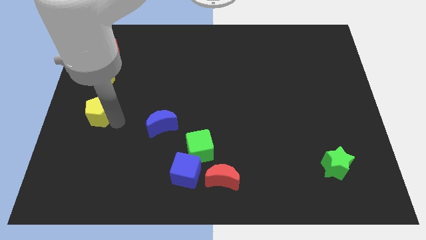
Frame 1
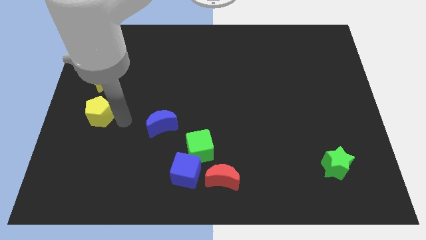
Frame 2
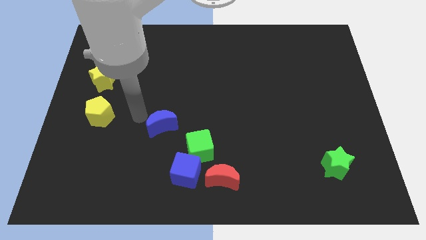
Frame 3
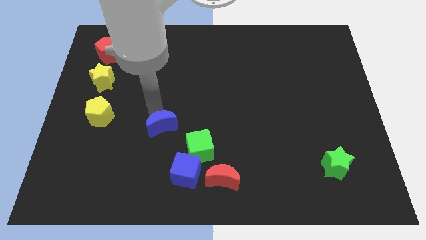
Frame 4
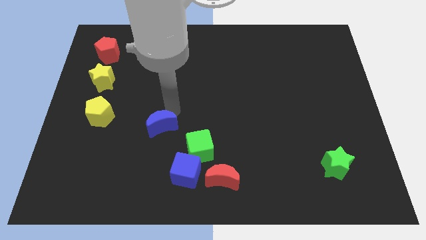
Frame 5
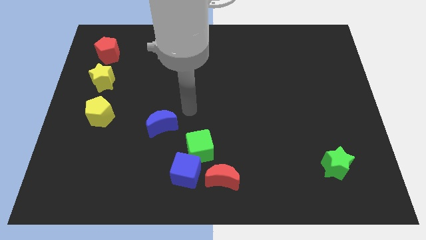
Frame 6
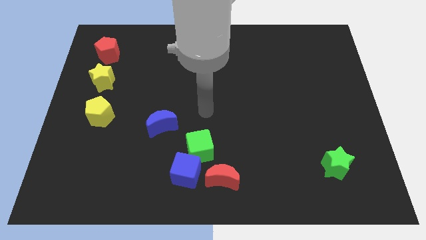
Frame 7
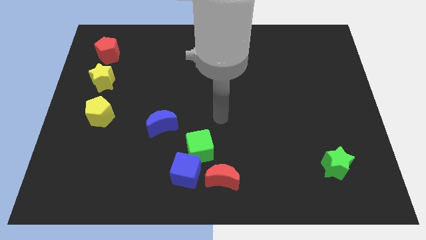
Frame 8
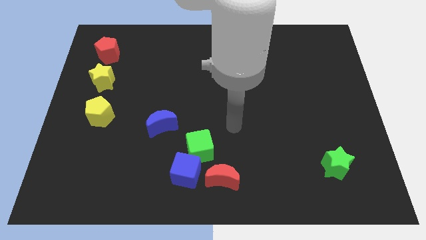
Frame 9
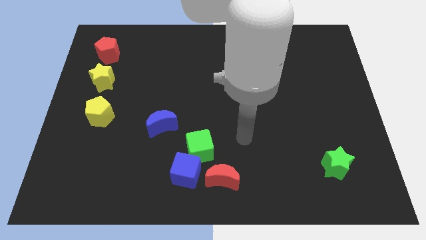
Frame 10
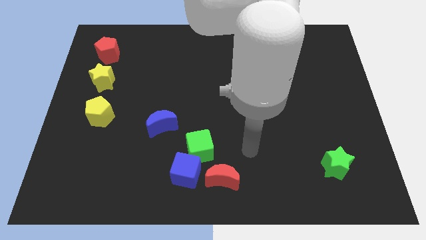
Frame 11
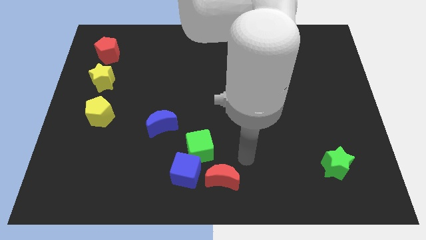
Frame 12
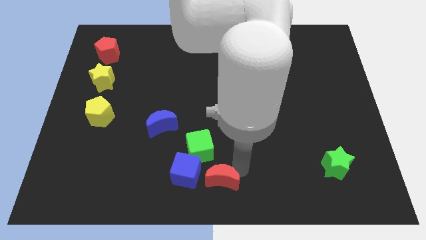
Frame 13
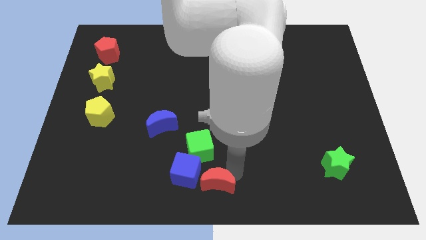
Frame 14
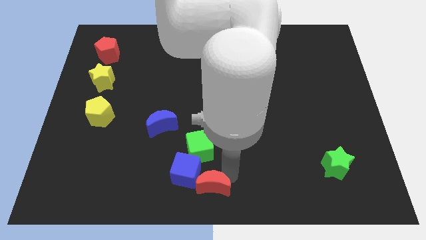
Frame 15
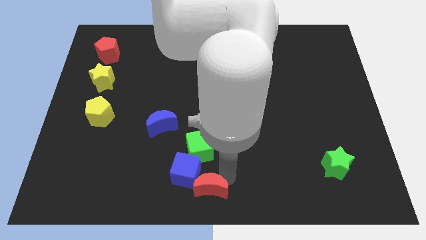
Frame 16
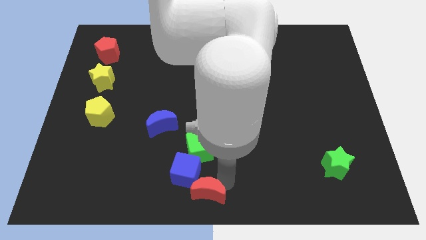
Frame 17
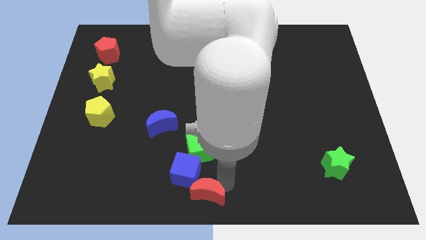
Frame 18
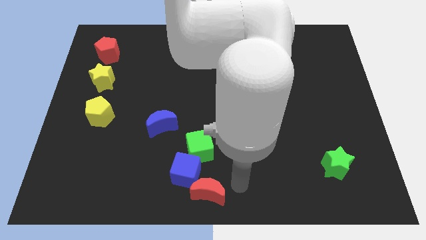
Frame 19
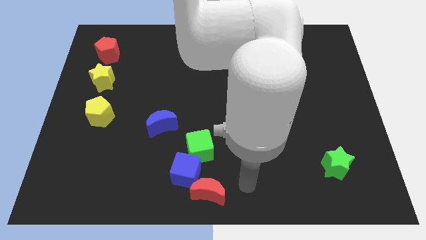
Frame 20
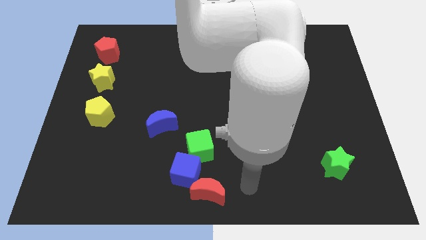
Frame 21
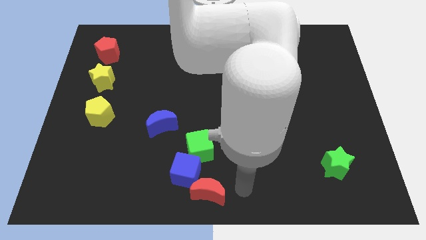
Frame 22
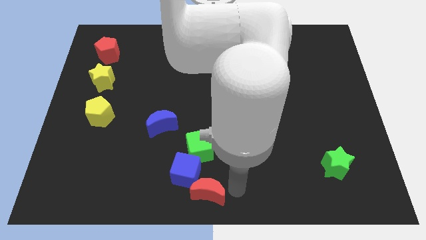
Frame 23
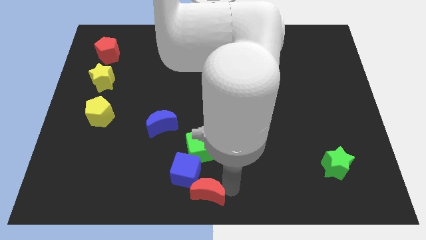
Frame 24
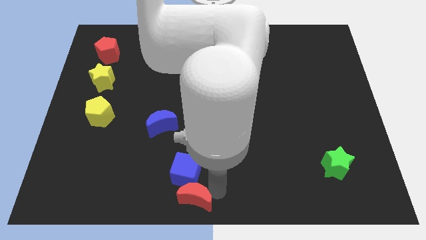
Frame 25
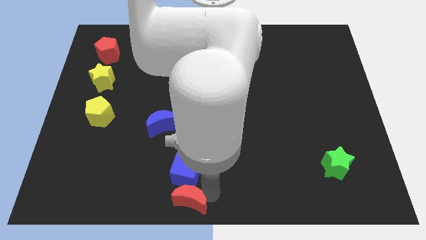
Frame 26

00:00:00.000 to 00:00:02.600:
move the red moon below the blue cube

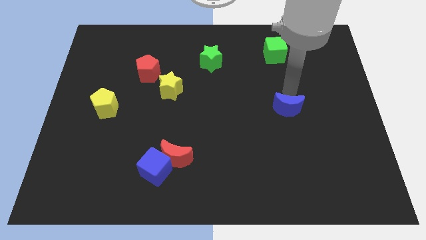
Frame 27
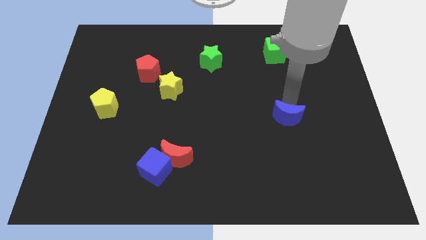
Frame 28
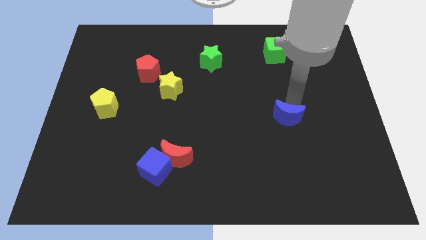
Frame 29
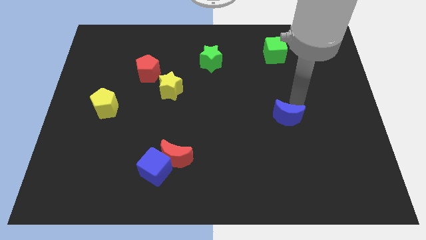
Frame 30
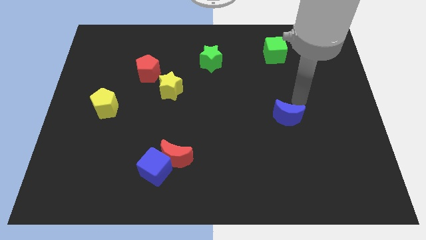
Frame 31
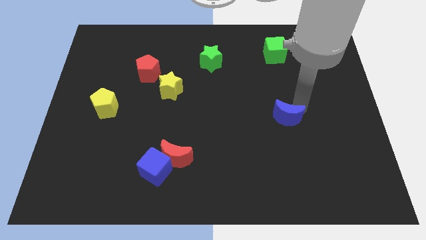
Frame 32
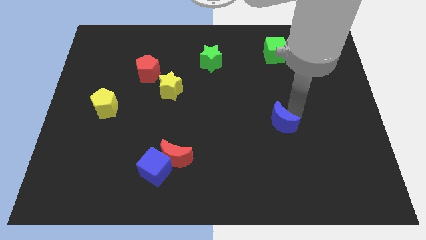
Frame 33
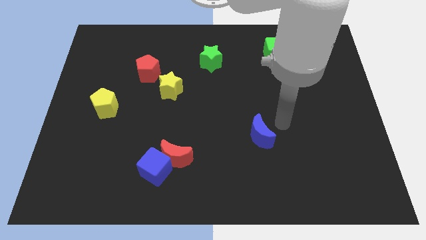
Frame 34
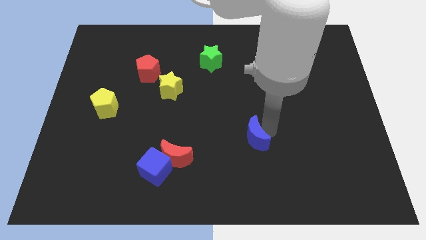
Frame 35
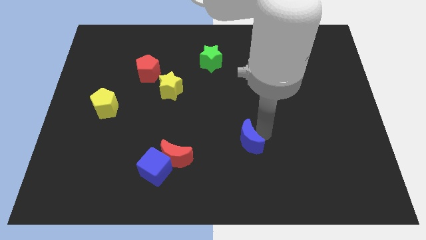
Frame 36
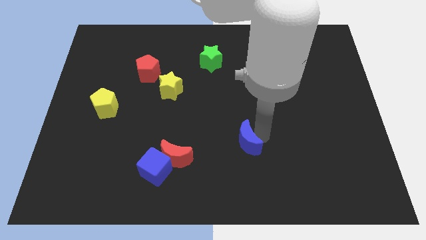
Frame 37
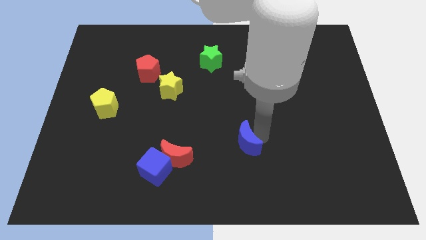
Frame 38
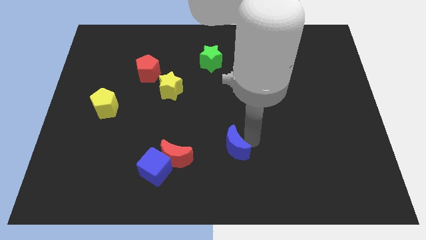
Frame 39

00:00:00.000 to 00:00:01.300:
push the blue moon diagonally to the top right of the red moon

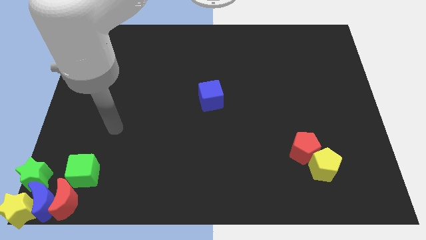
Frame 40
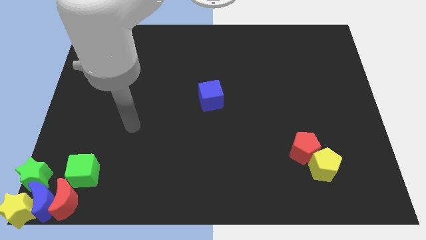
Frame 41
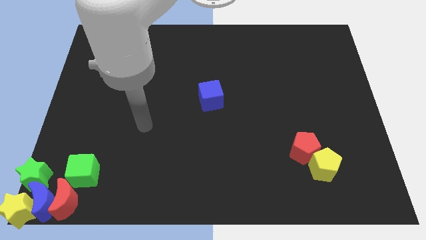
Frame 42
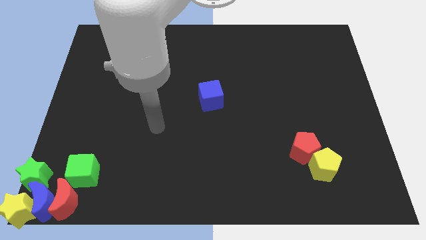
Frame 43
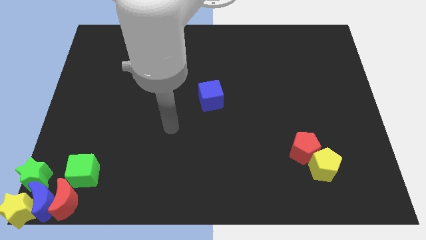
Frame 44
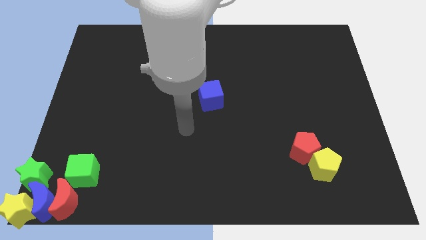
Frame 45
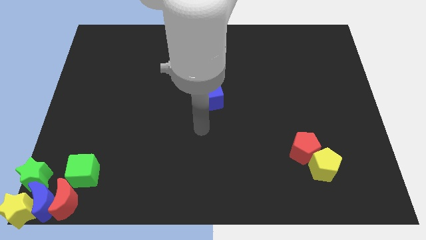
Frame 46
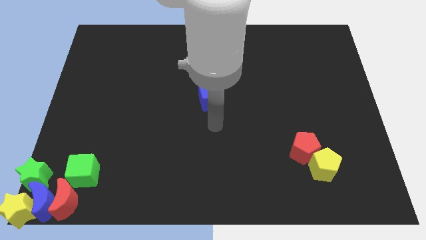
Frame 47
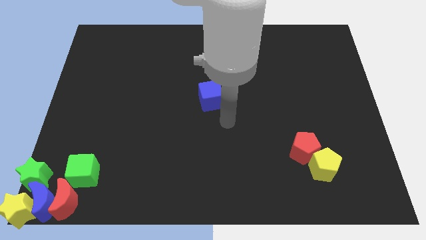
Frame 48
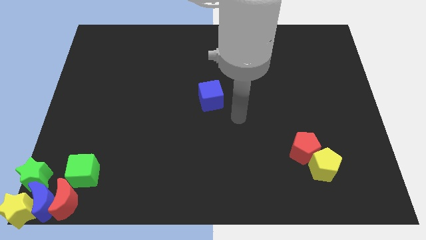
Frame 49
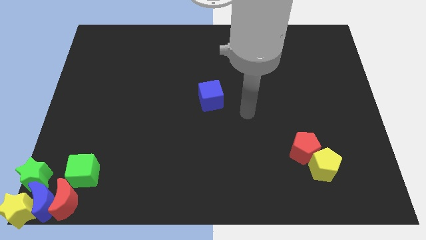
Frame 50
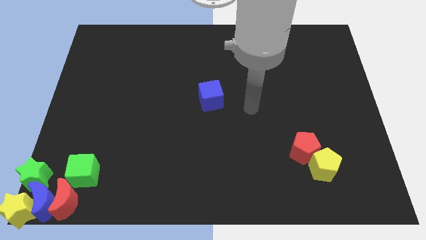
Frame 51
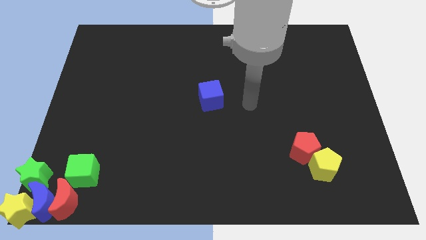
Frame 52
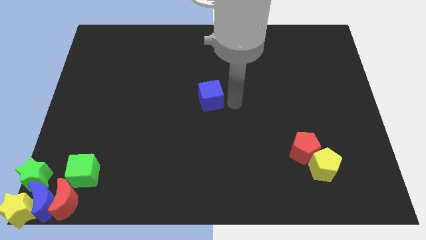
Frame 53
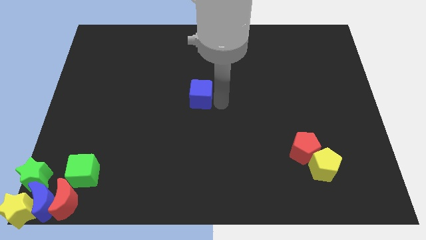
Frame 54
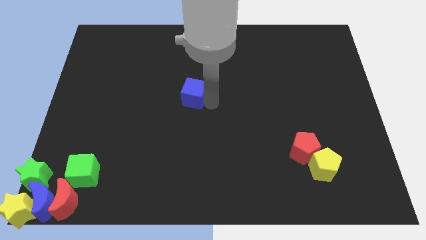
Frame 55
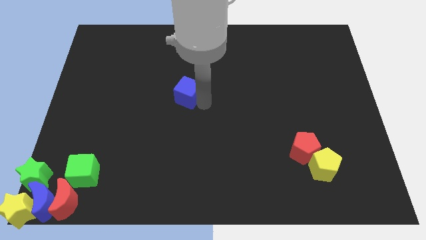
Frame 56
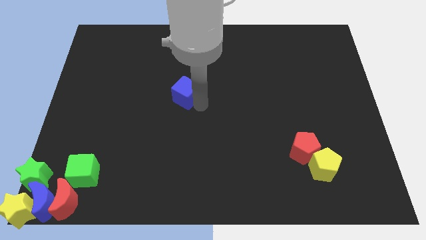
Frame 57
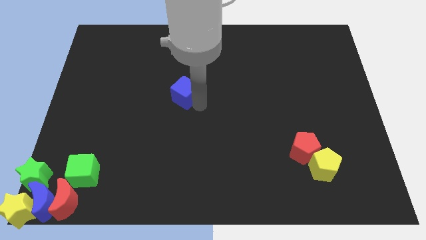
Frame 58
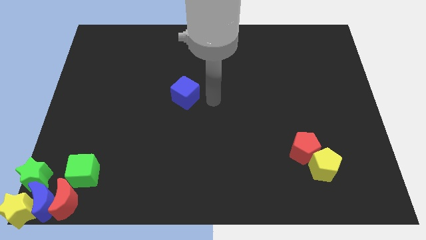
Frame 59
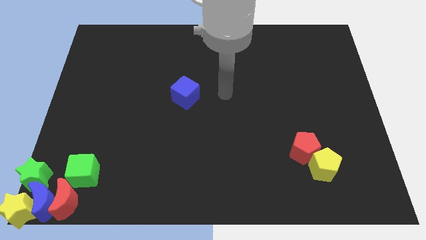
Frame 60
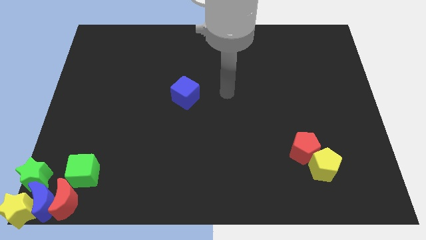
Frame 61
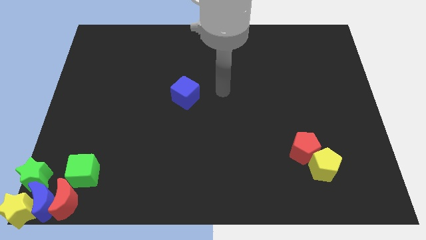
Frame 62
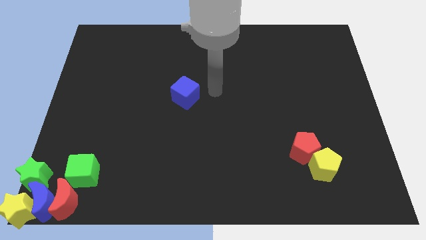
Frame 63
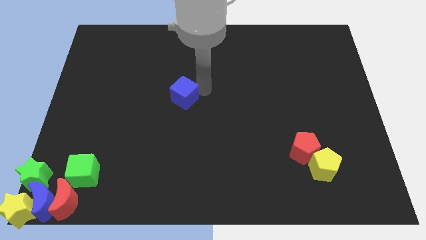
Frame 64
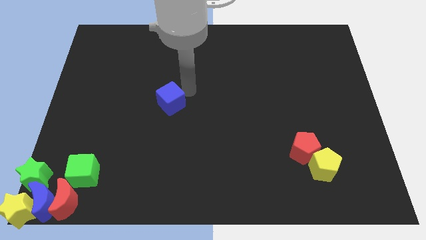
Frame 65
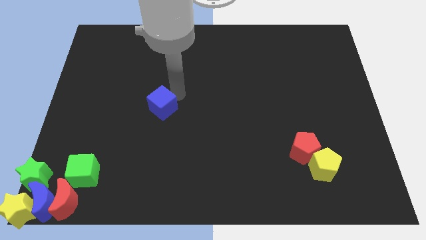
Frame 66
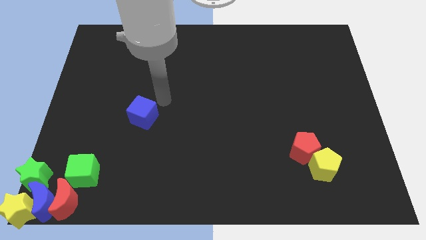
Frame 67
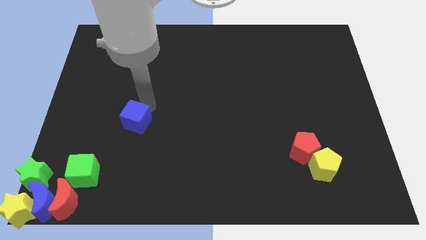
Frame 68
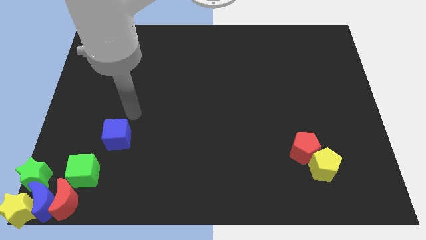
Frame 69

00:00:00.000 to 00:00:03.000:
push the blue cube to the top right side of the green cube

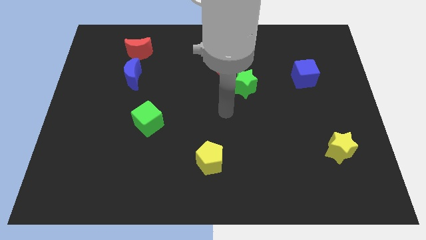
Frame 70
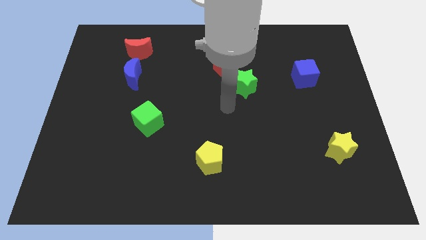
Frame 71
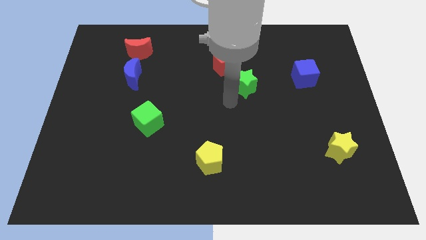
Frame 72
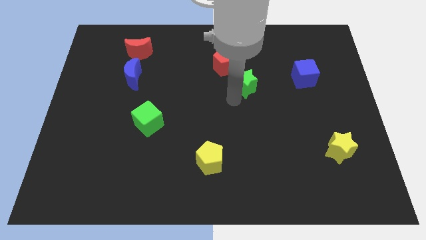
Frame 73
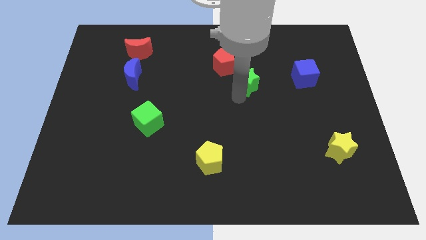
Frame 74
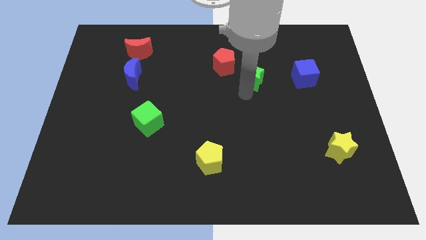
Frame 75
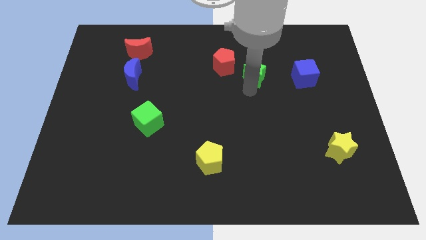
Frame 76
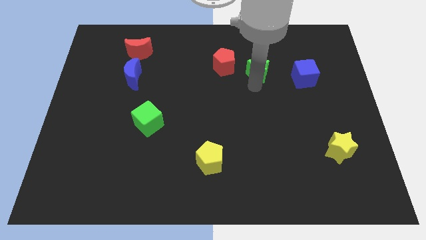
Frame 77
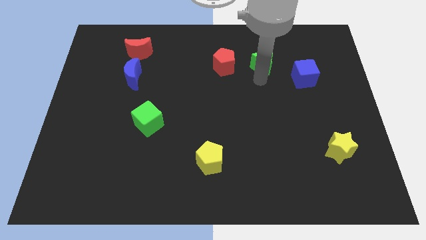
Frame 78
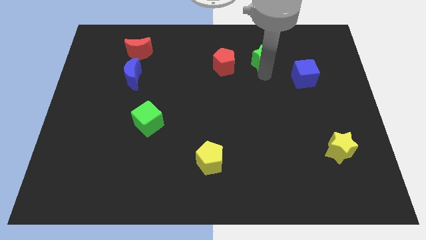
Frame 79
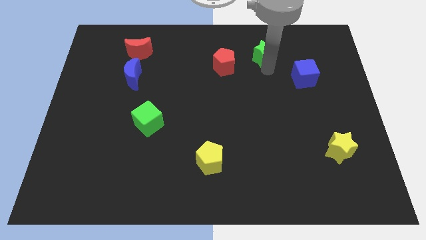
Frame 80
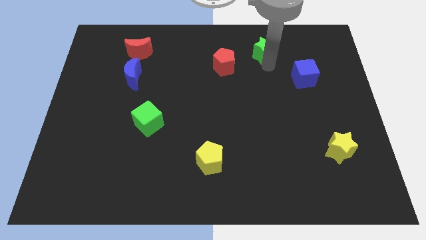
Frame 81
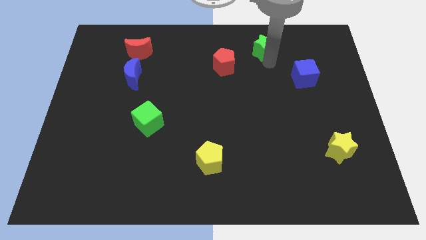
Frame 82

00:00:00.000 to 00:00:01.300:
slide the green star diagonally top right to the red pentagon

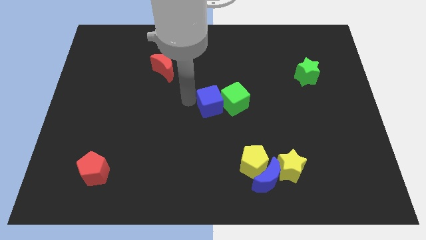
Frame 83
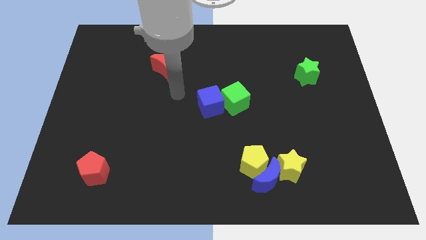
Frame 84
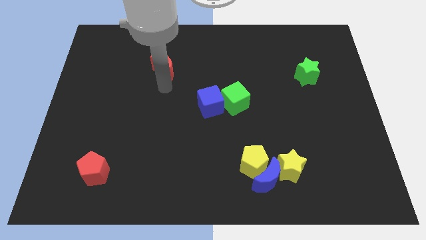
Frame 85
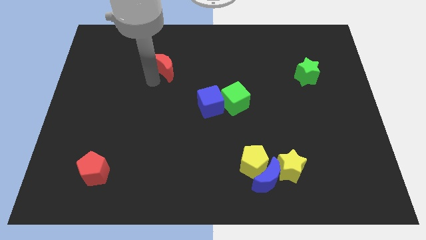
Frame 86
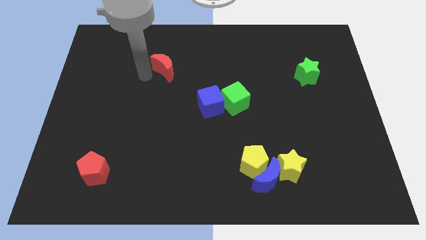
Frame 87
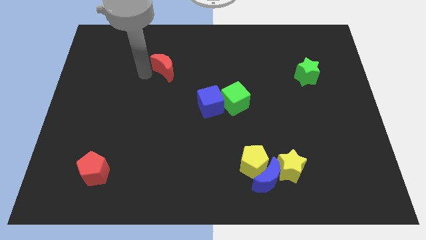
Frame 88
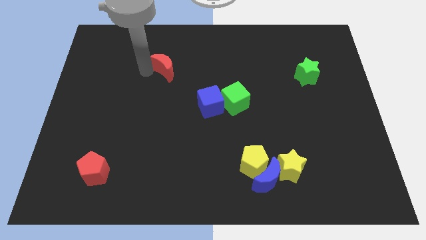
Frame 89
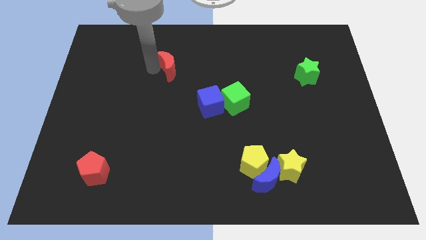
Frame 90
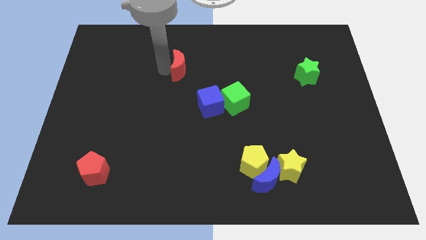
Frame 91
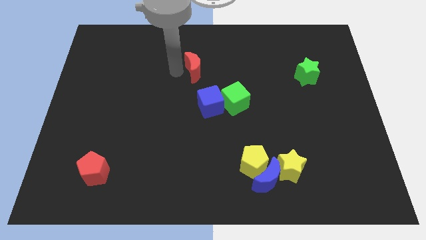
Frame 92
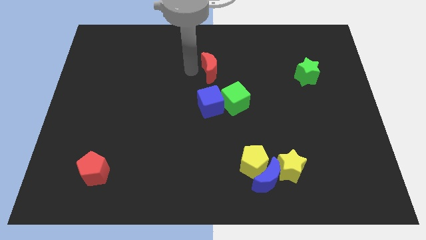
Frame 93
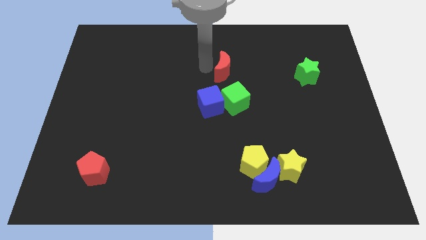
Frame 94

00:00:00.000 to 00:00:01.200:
place the red crescent vertically above the blue cube
